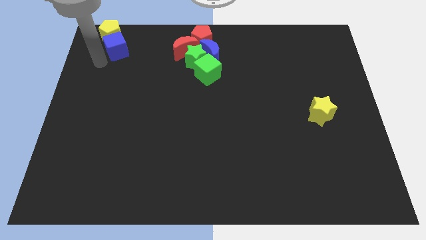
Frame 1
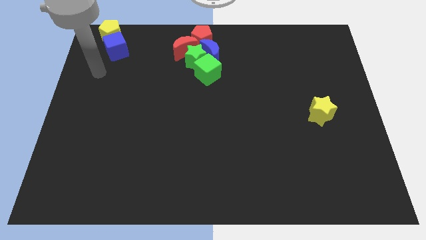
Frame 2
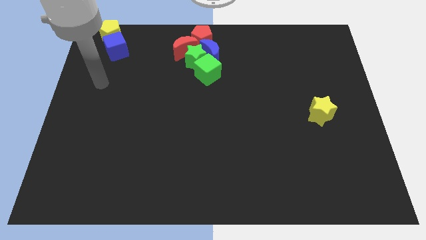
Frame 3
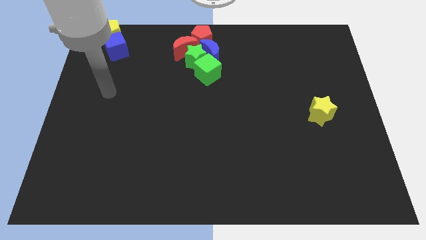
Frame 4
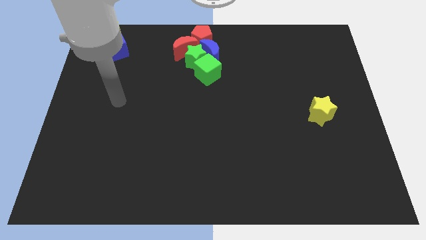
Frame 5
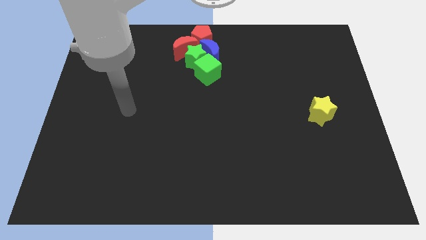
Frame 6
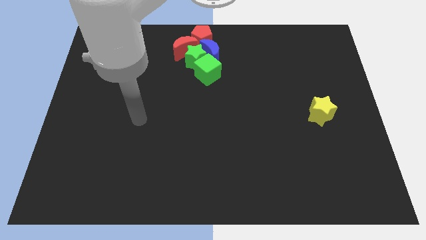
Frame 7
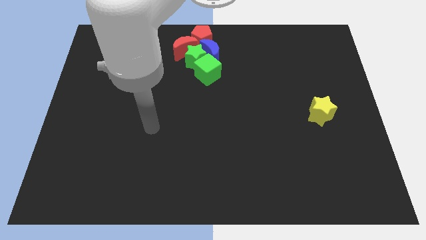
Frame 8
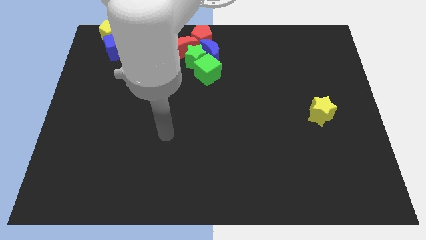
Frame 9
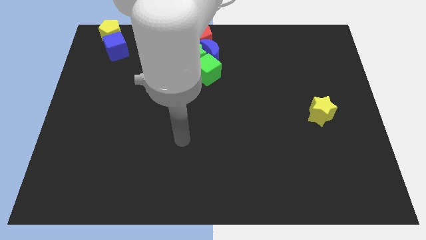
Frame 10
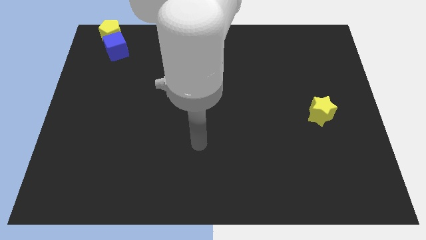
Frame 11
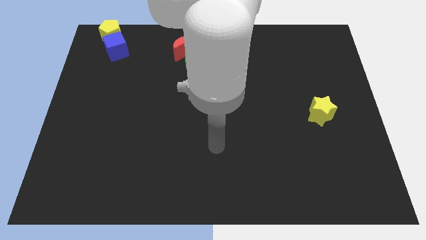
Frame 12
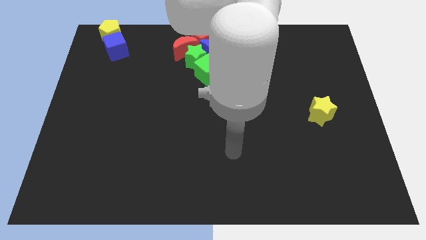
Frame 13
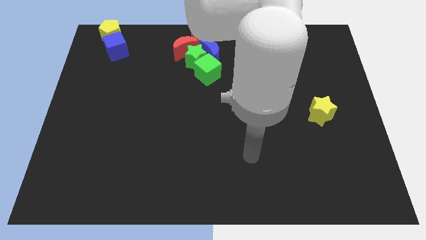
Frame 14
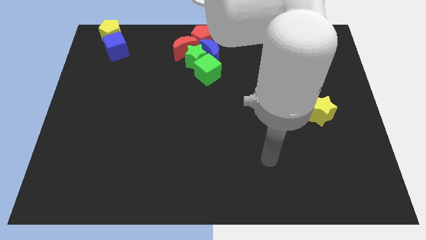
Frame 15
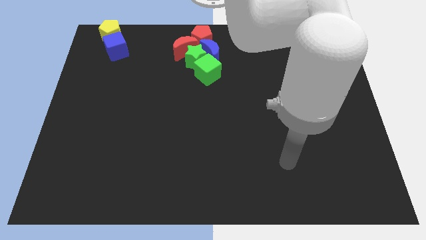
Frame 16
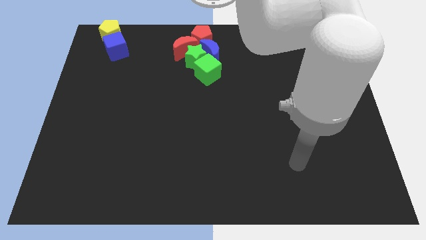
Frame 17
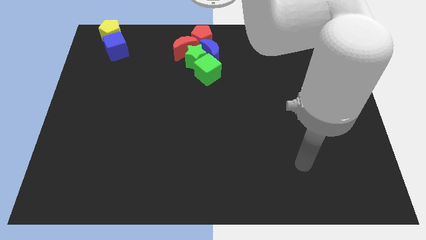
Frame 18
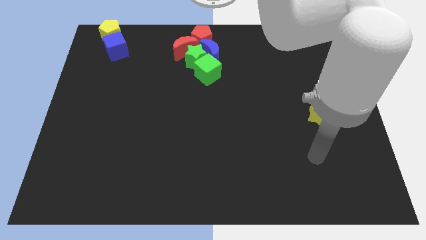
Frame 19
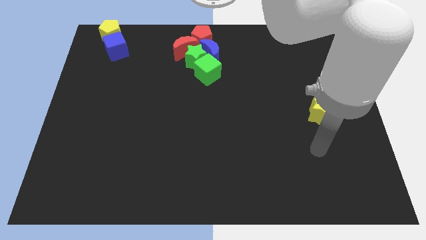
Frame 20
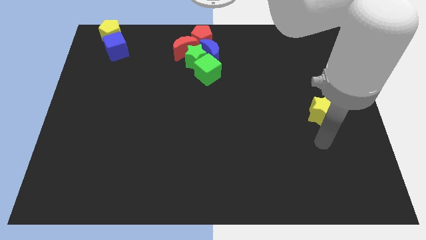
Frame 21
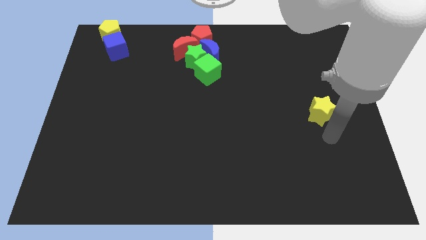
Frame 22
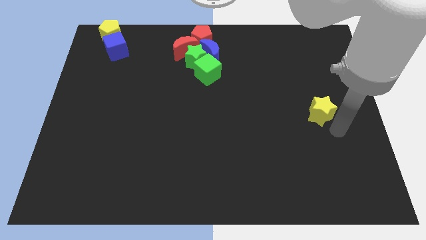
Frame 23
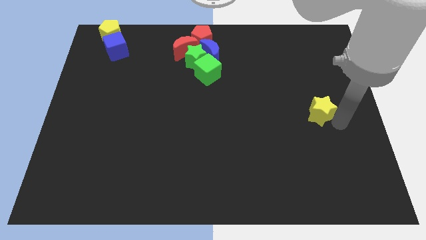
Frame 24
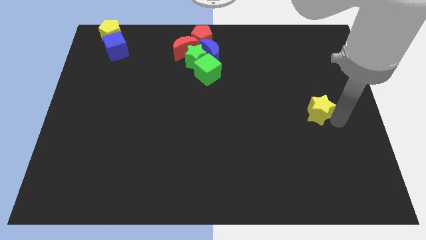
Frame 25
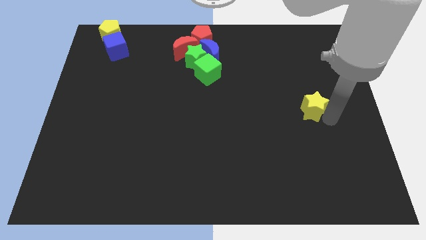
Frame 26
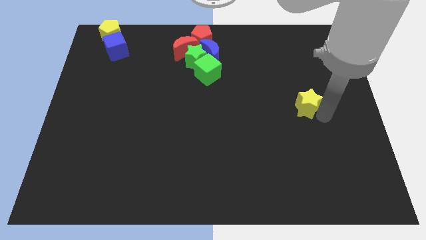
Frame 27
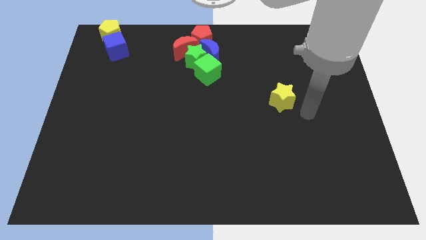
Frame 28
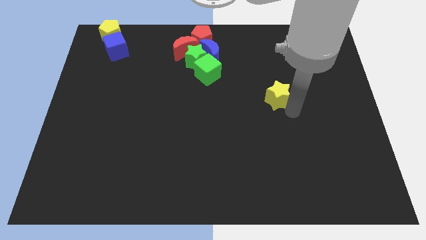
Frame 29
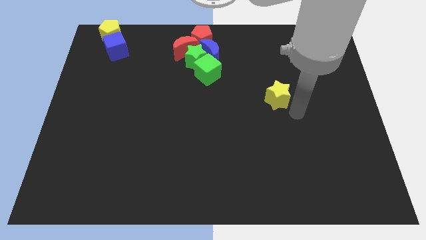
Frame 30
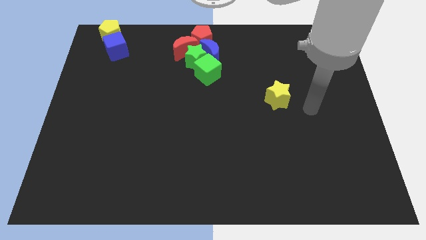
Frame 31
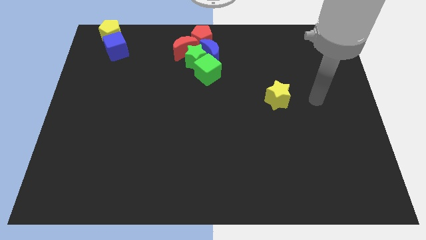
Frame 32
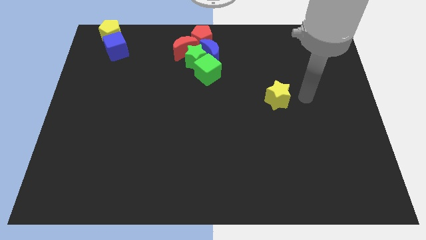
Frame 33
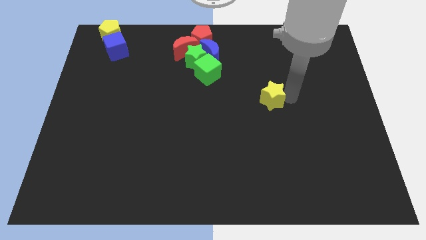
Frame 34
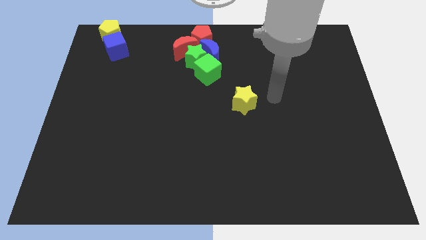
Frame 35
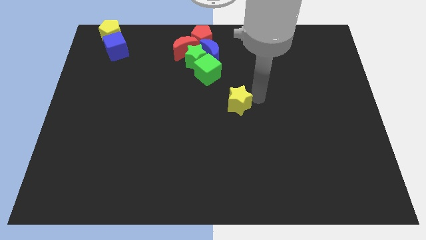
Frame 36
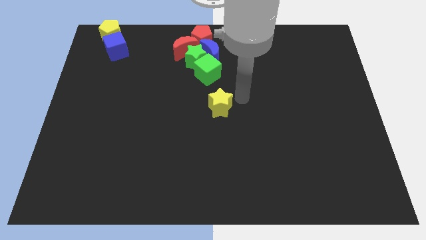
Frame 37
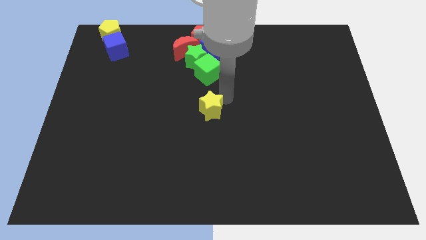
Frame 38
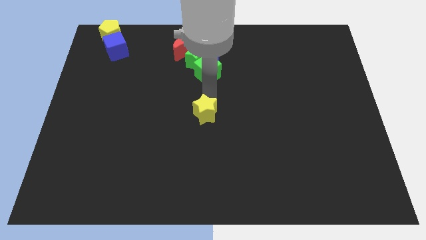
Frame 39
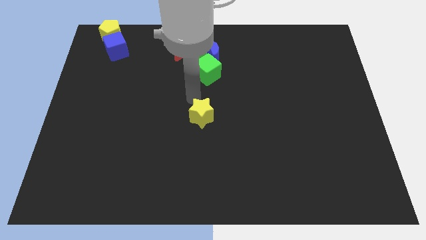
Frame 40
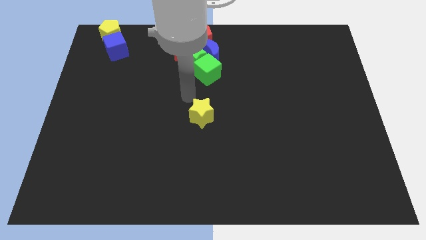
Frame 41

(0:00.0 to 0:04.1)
move yellow star below the green cube

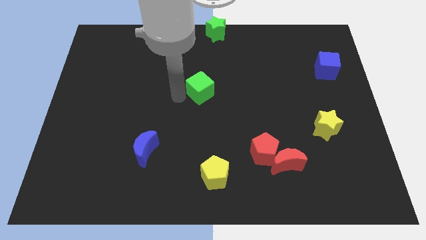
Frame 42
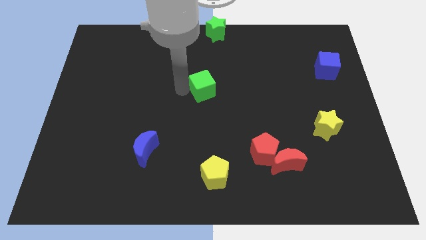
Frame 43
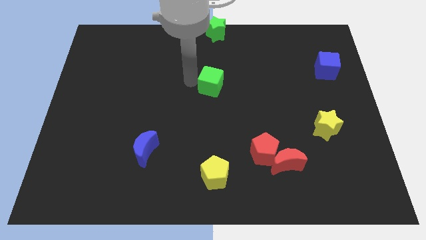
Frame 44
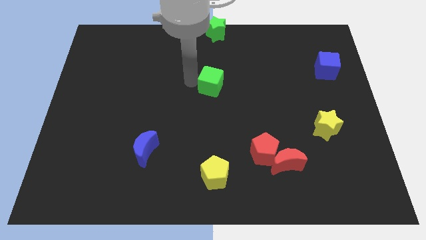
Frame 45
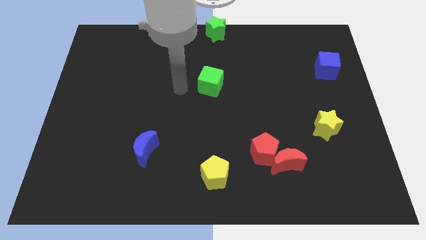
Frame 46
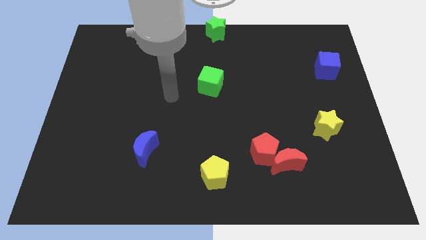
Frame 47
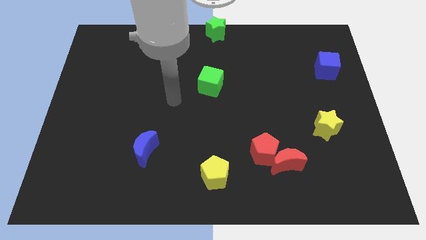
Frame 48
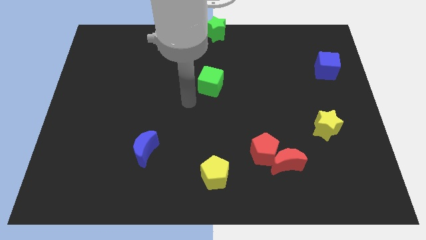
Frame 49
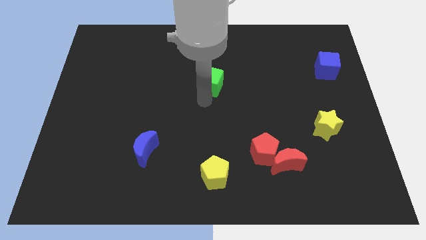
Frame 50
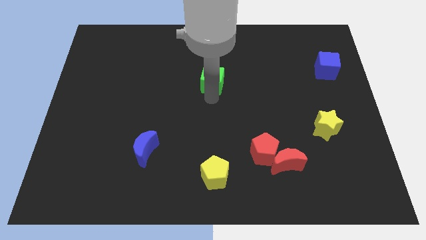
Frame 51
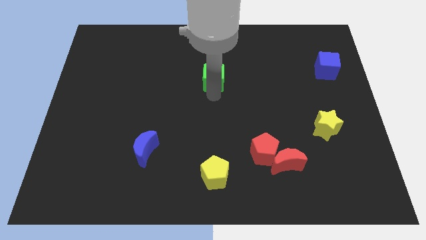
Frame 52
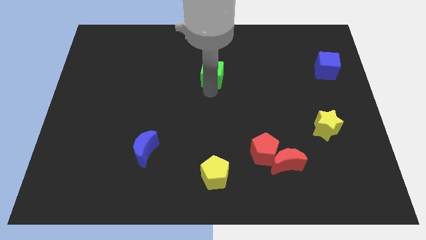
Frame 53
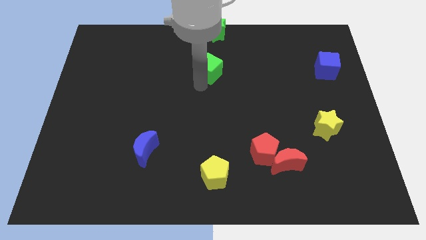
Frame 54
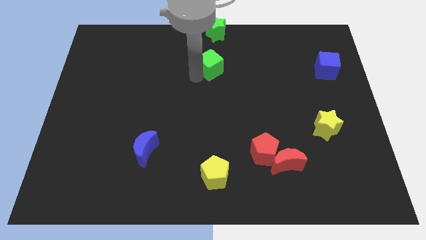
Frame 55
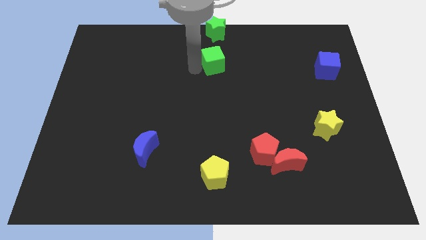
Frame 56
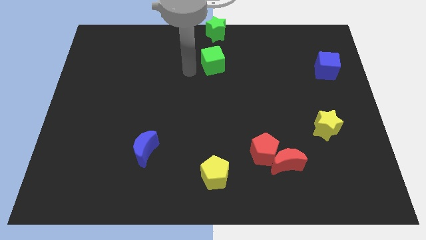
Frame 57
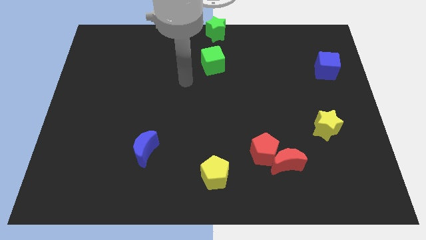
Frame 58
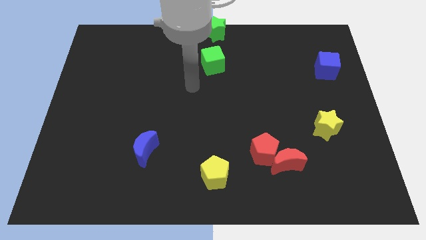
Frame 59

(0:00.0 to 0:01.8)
push the green cube to the bottom of green star

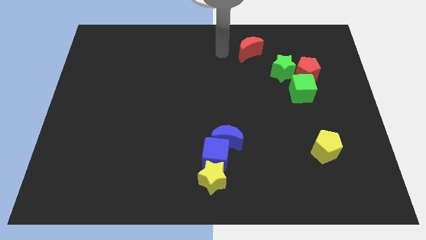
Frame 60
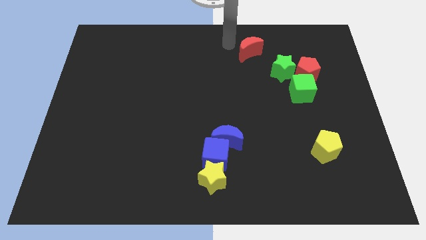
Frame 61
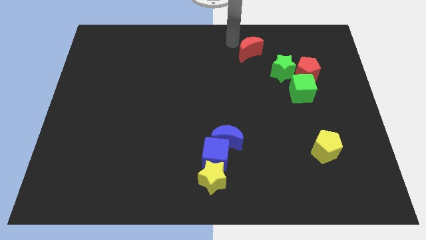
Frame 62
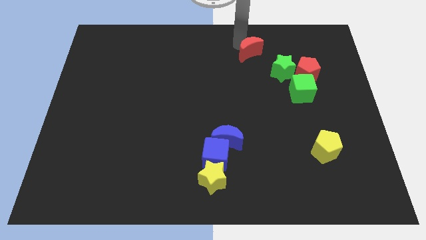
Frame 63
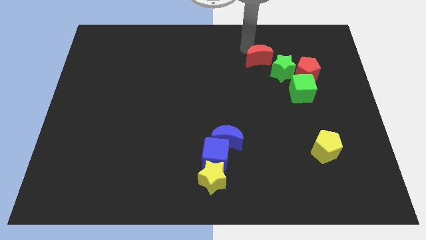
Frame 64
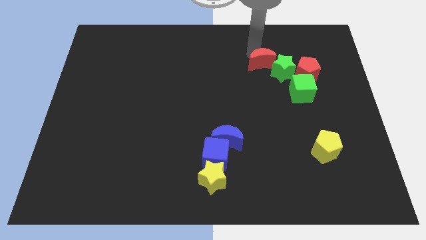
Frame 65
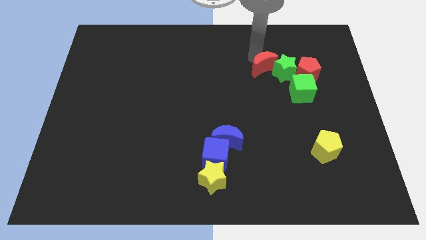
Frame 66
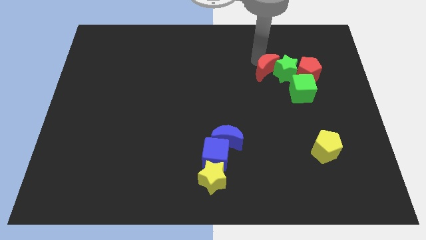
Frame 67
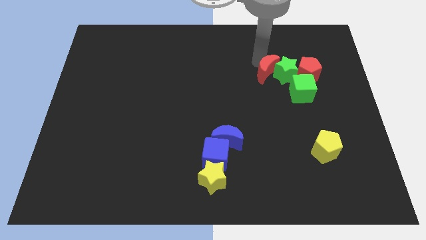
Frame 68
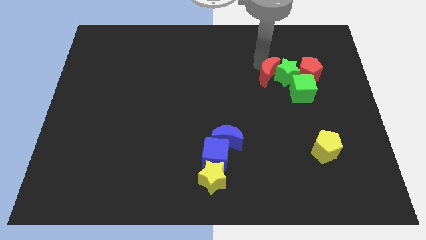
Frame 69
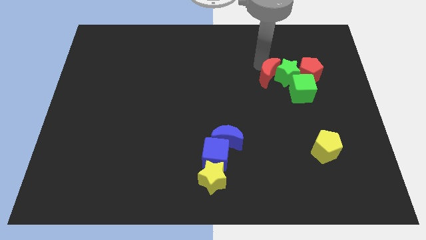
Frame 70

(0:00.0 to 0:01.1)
push the red crescent into the green star

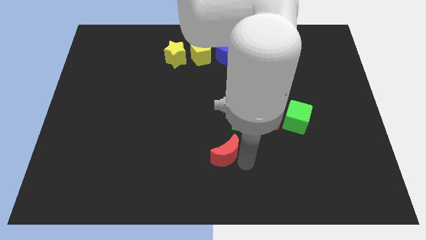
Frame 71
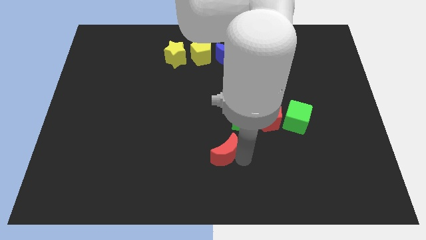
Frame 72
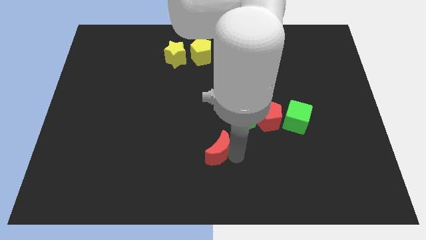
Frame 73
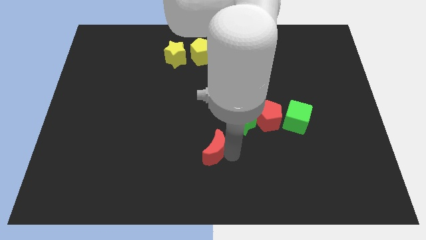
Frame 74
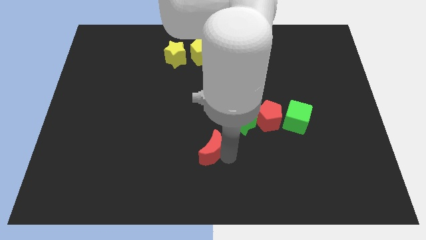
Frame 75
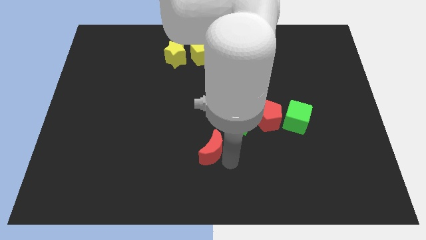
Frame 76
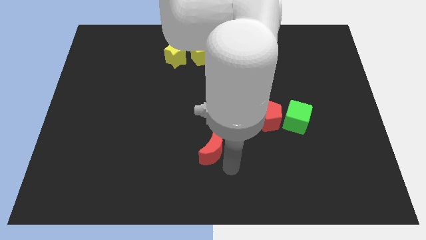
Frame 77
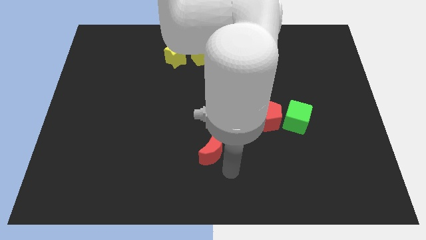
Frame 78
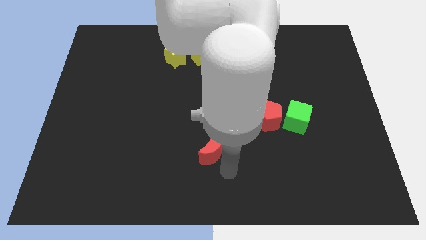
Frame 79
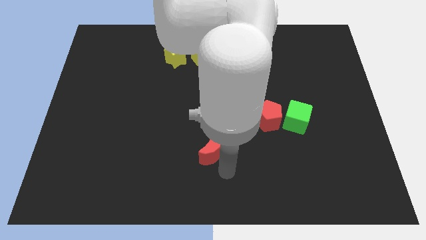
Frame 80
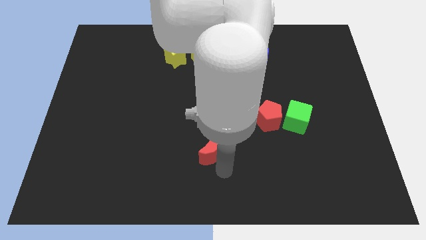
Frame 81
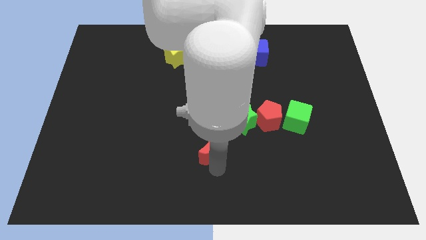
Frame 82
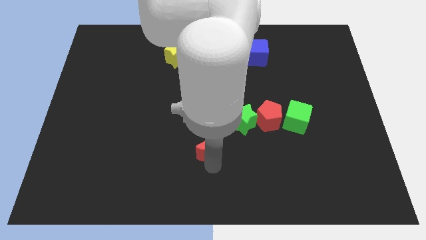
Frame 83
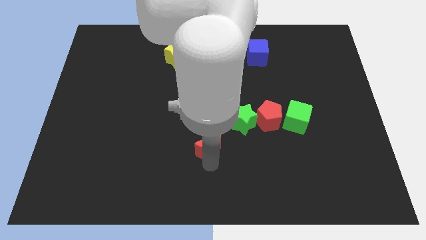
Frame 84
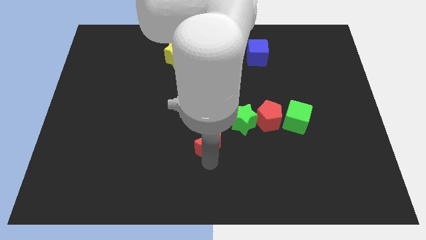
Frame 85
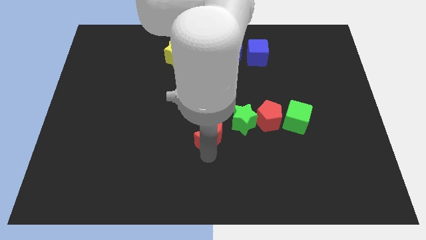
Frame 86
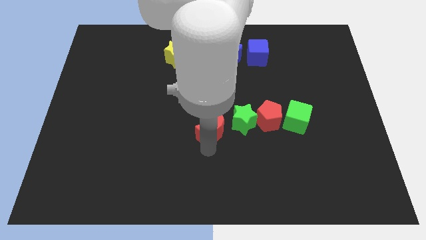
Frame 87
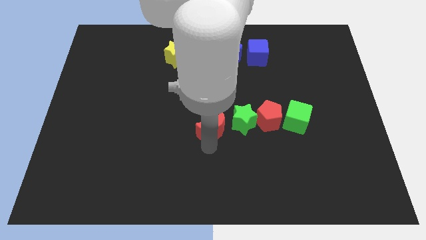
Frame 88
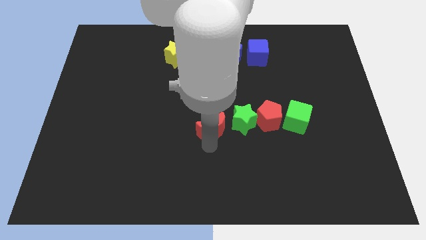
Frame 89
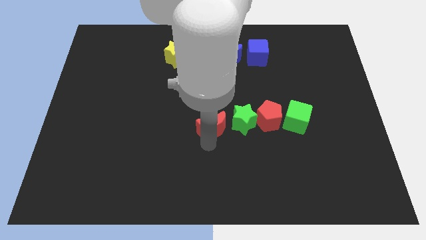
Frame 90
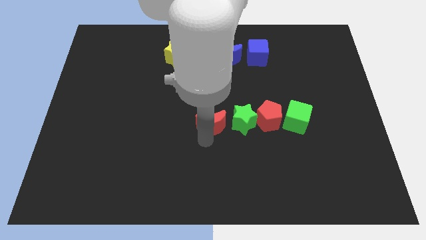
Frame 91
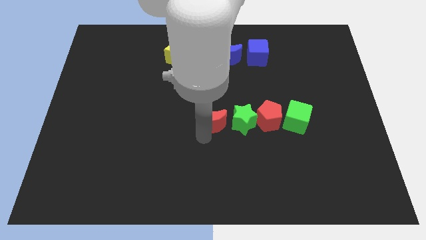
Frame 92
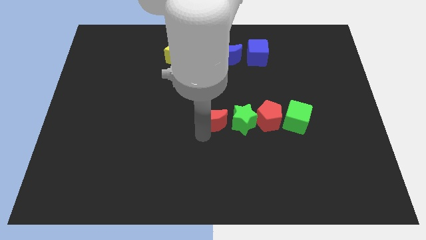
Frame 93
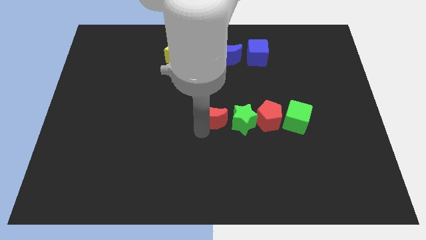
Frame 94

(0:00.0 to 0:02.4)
put the red moon left to the green star
